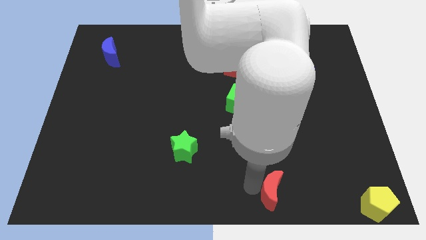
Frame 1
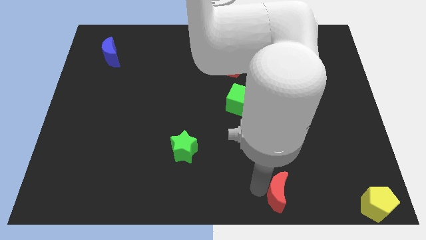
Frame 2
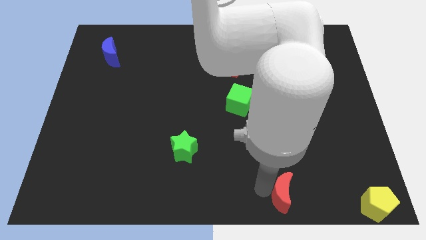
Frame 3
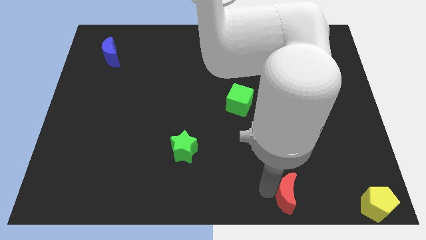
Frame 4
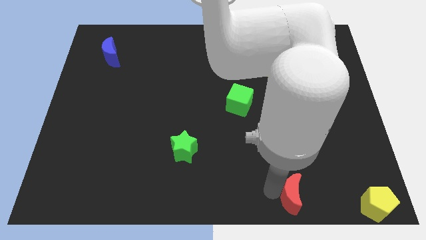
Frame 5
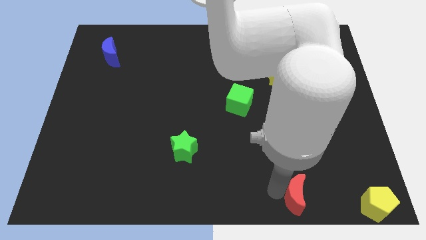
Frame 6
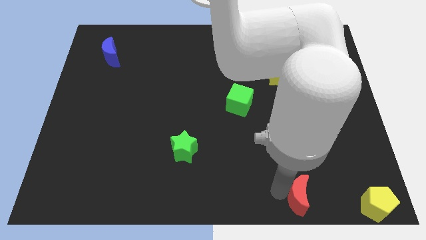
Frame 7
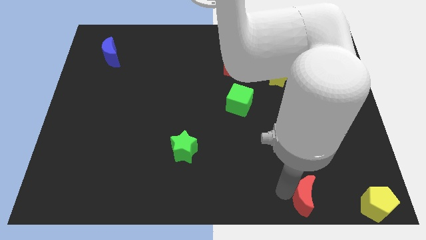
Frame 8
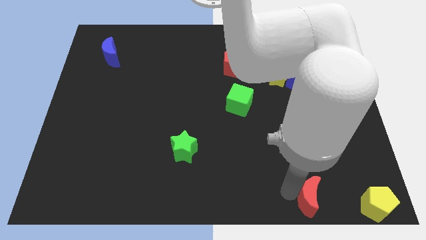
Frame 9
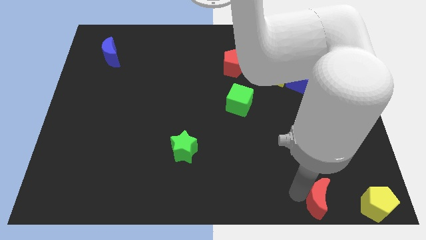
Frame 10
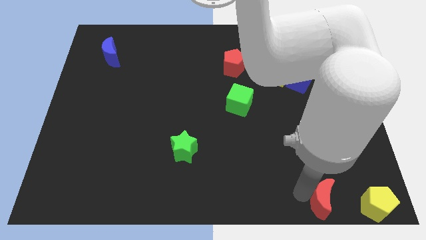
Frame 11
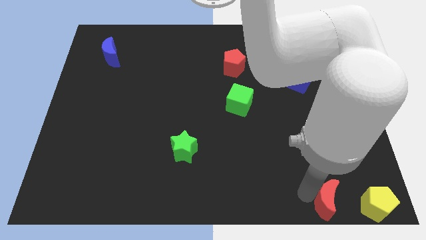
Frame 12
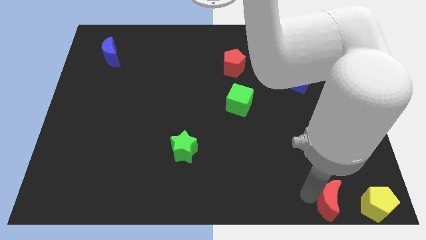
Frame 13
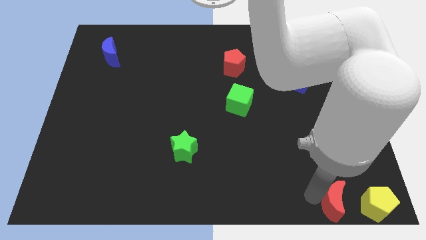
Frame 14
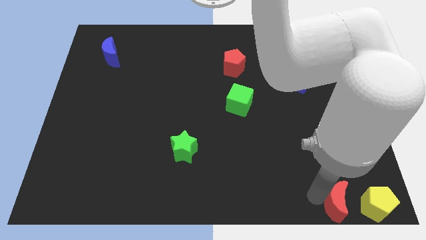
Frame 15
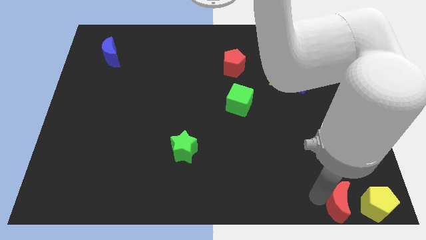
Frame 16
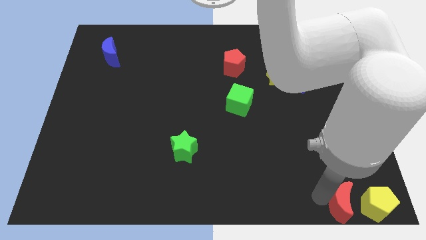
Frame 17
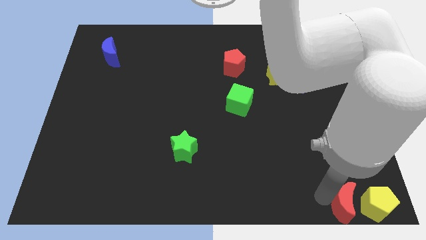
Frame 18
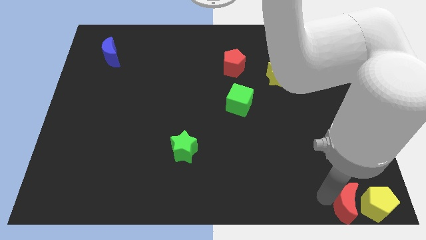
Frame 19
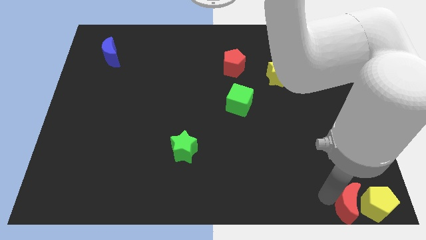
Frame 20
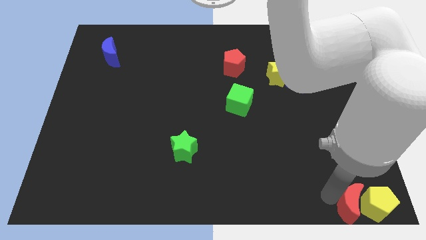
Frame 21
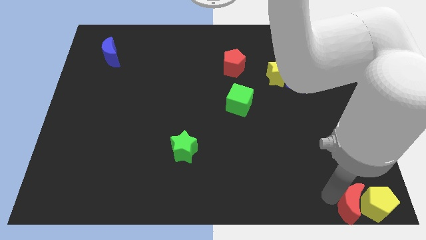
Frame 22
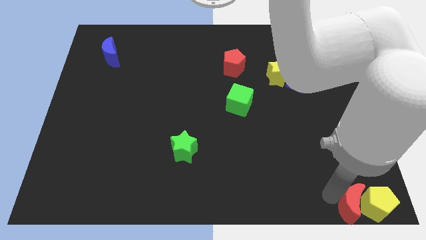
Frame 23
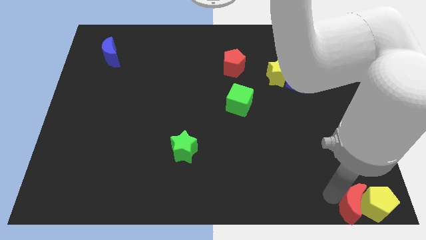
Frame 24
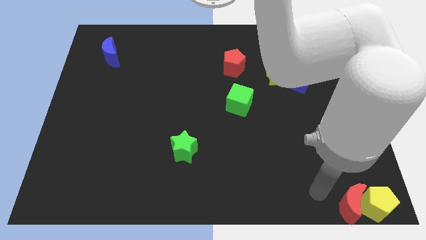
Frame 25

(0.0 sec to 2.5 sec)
put the red crescent close to the yellow pentagon

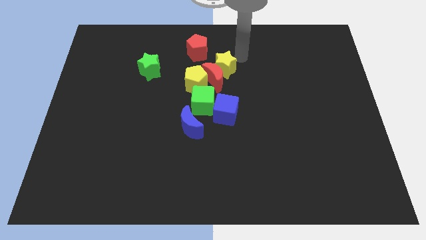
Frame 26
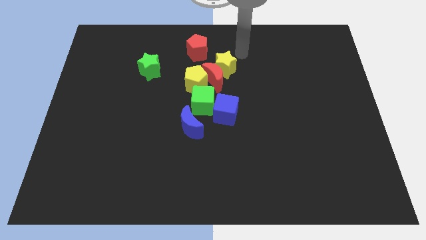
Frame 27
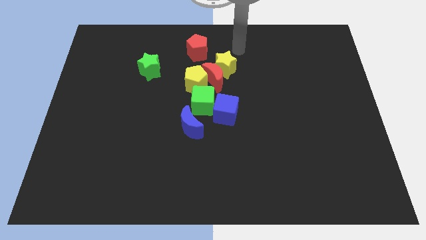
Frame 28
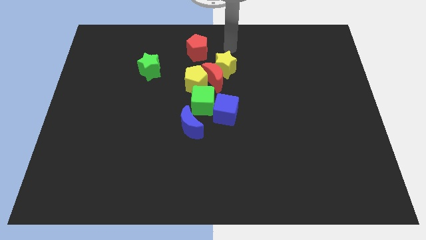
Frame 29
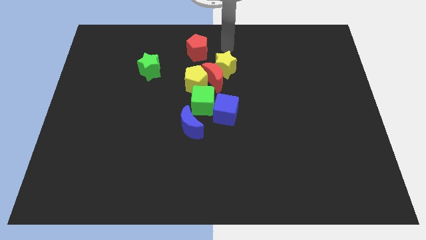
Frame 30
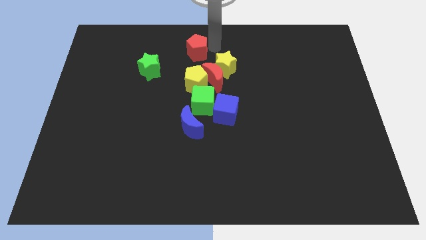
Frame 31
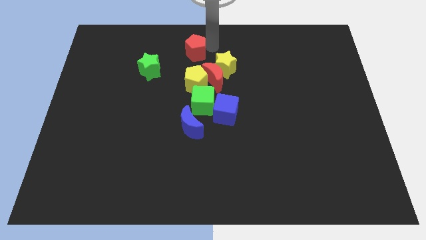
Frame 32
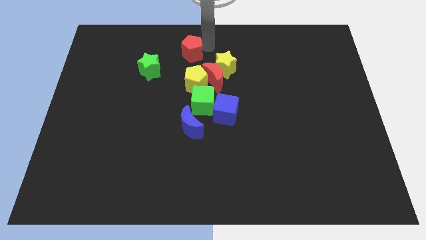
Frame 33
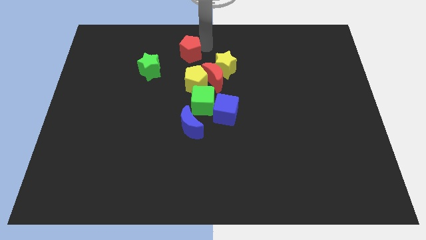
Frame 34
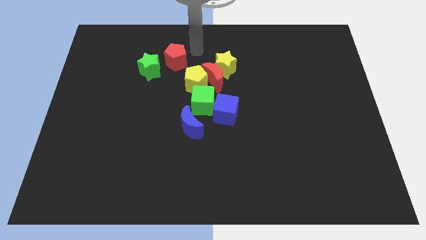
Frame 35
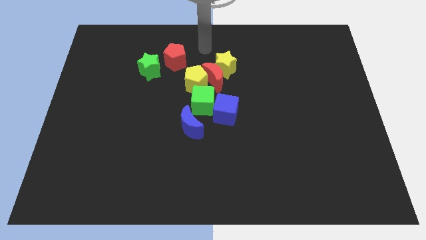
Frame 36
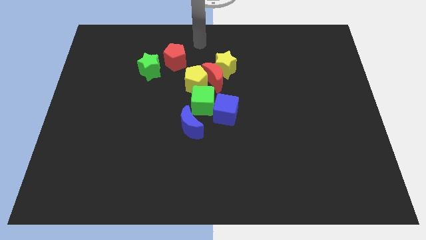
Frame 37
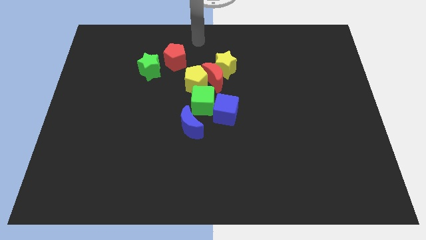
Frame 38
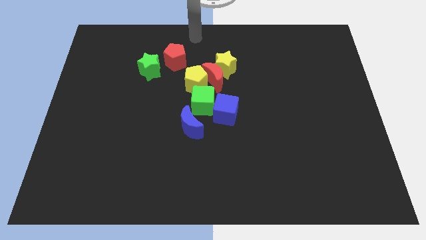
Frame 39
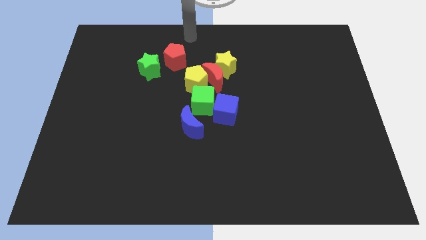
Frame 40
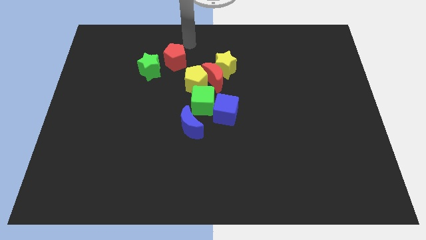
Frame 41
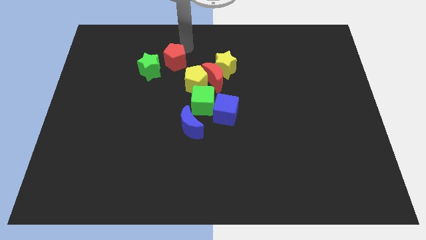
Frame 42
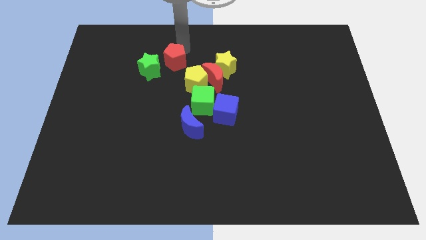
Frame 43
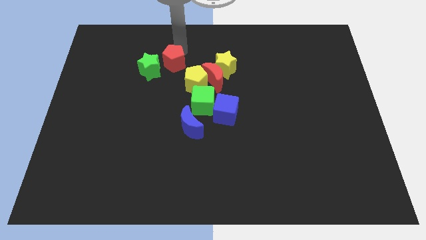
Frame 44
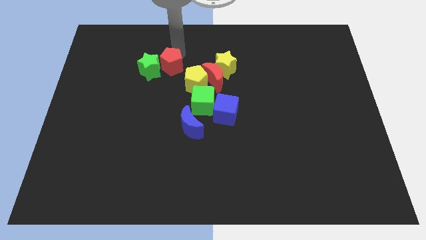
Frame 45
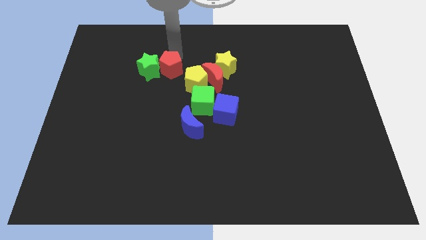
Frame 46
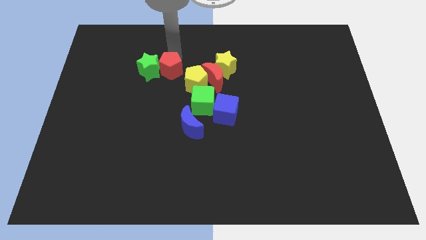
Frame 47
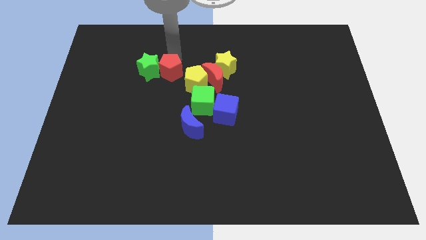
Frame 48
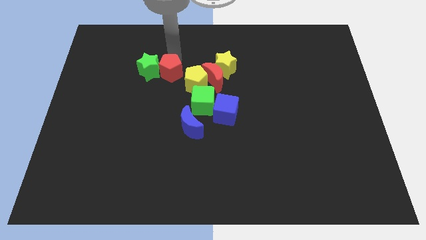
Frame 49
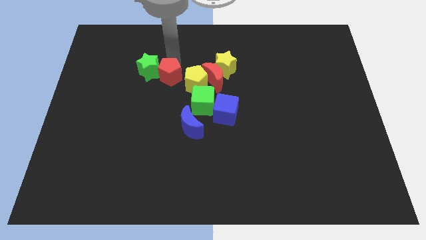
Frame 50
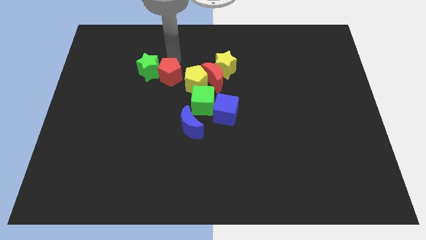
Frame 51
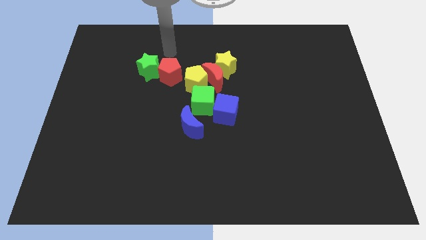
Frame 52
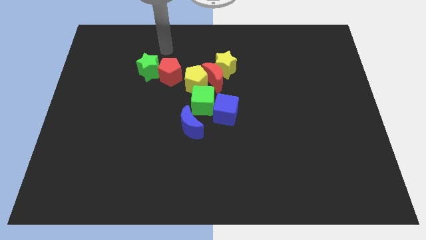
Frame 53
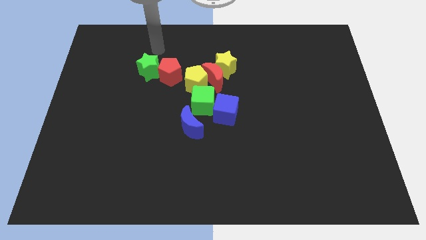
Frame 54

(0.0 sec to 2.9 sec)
place the red pentagon to the right of the green star

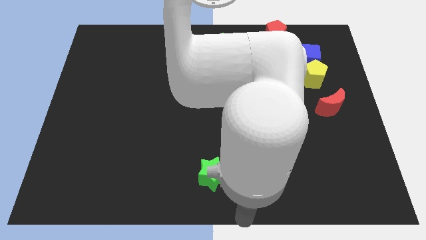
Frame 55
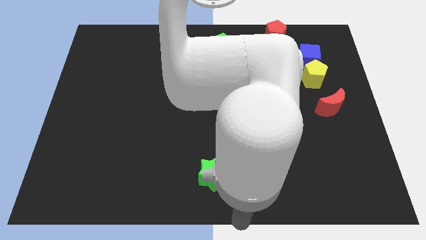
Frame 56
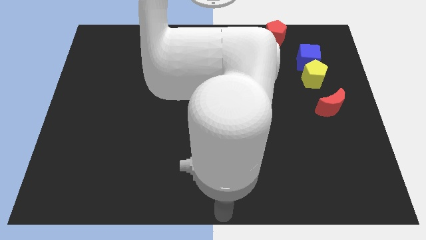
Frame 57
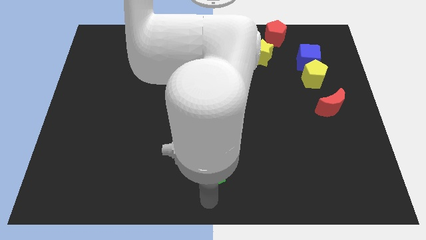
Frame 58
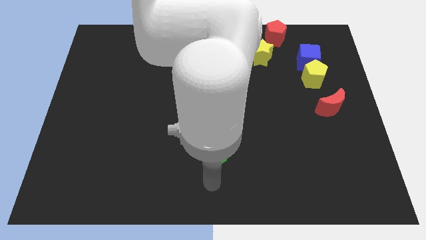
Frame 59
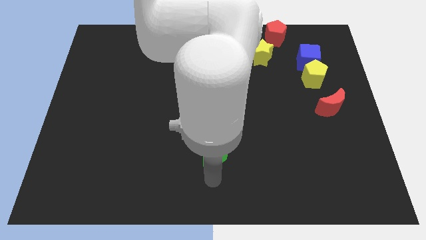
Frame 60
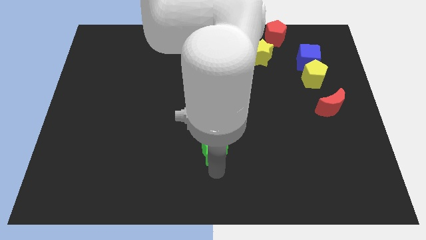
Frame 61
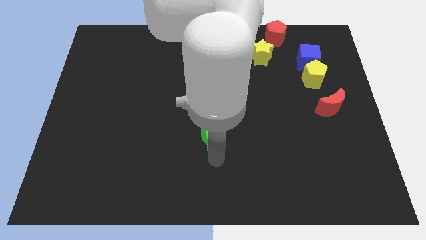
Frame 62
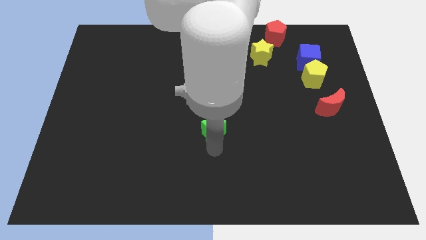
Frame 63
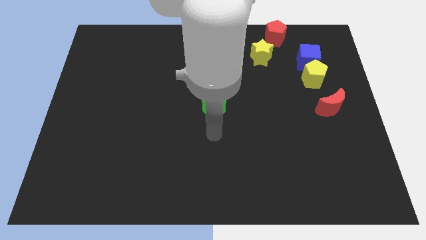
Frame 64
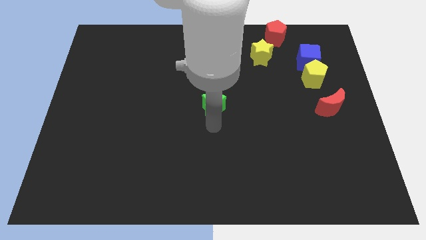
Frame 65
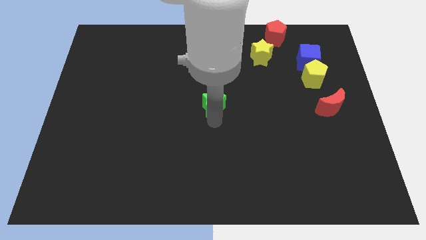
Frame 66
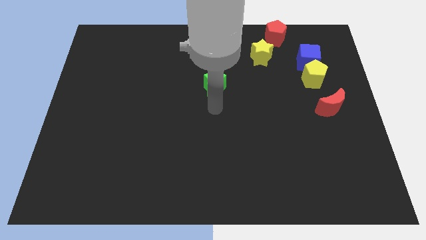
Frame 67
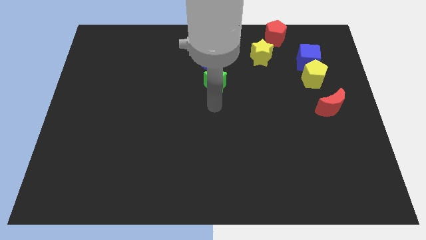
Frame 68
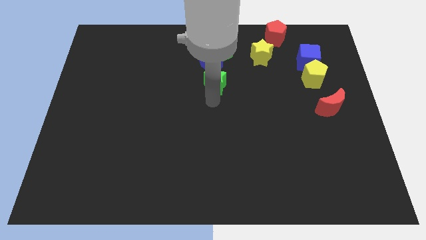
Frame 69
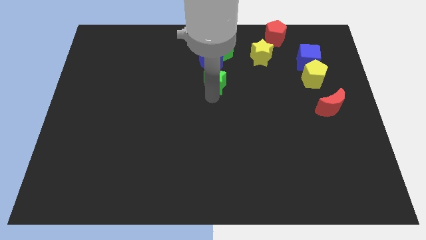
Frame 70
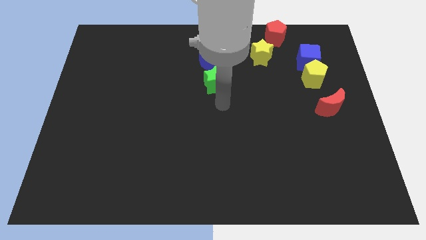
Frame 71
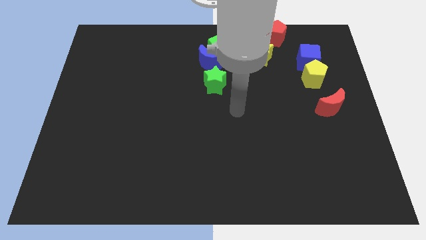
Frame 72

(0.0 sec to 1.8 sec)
push the green star towards the blue semicircle

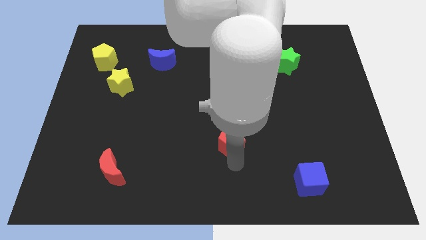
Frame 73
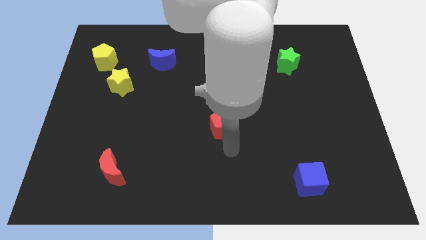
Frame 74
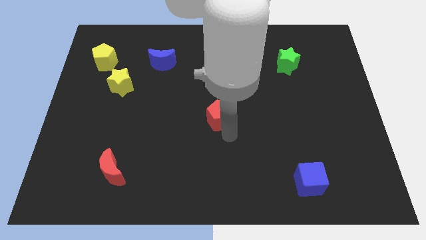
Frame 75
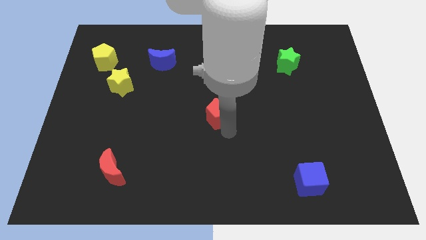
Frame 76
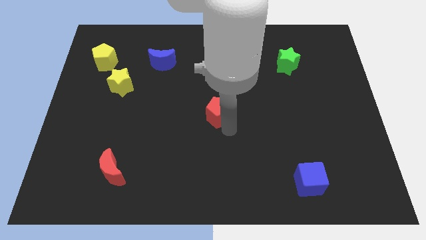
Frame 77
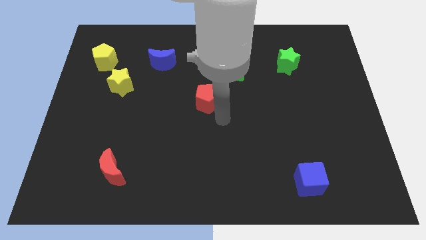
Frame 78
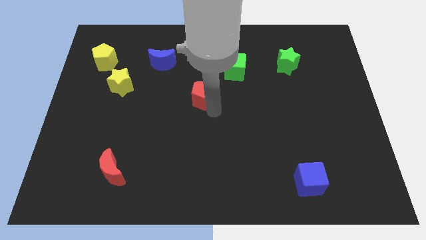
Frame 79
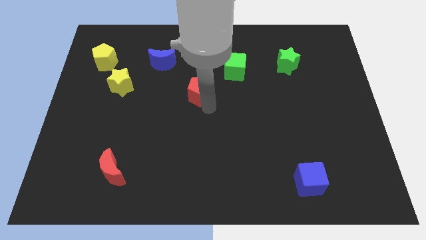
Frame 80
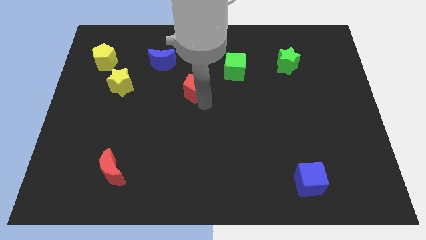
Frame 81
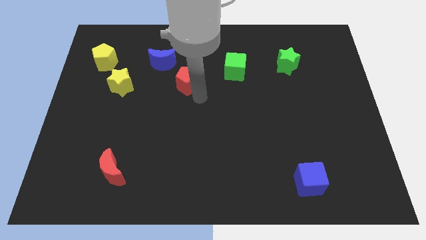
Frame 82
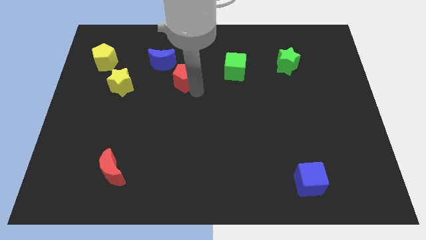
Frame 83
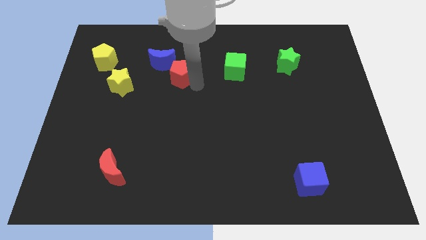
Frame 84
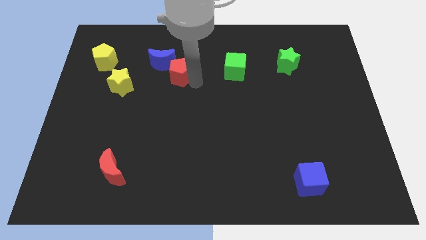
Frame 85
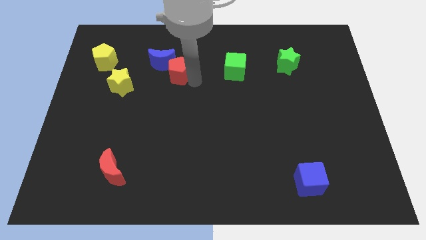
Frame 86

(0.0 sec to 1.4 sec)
push the red pentagon to the left of the green cube

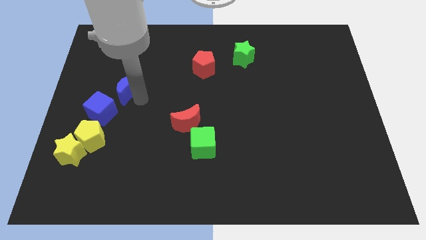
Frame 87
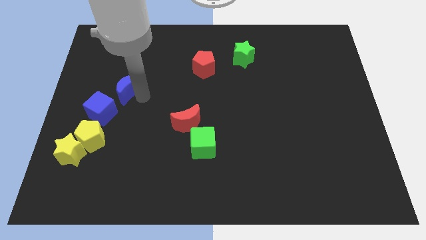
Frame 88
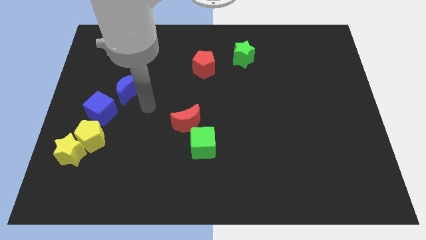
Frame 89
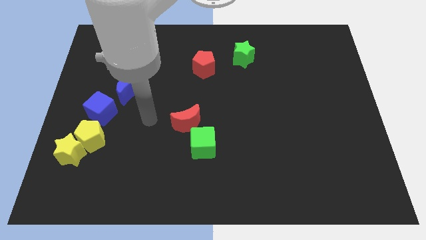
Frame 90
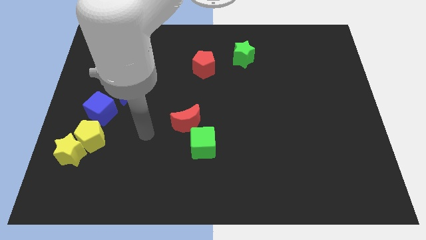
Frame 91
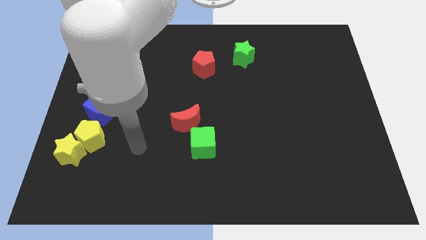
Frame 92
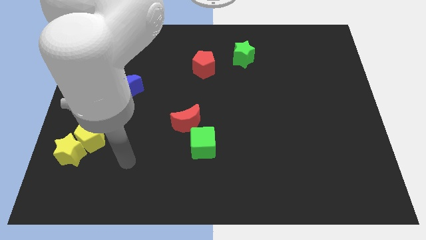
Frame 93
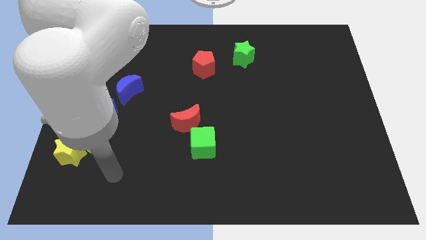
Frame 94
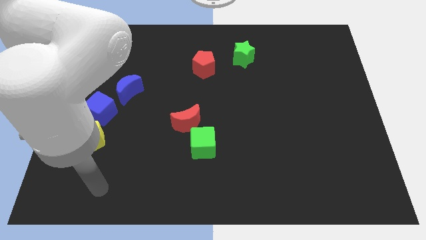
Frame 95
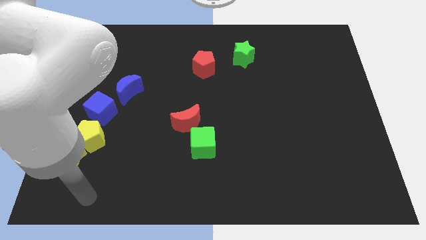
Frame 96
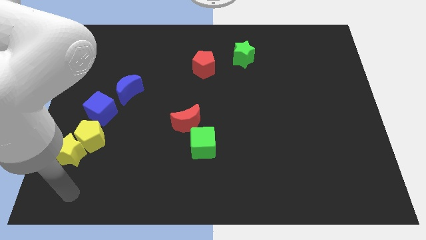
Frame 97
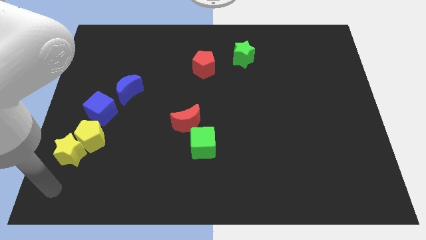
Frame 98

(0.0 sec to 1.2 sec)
move the arm away from the blue moon
